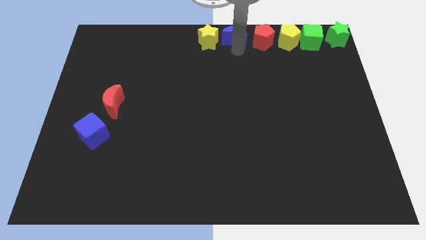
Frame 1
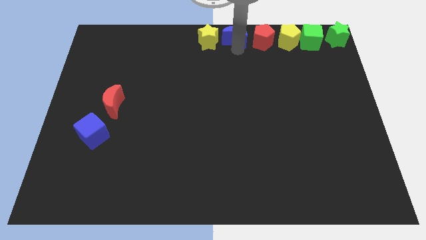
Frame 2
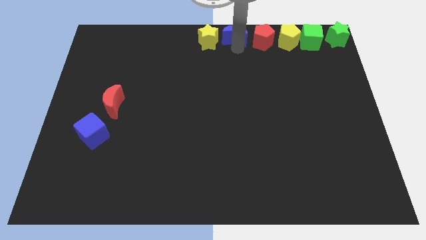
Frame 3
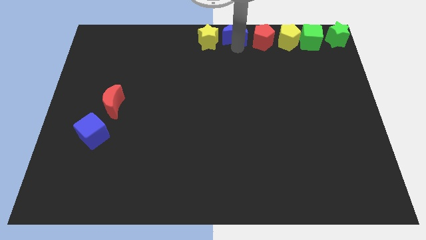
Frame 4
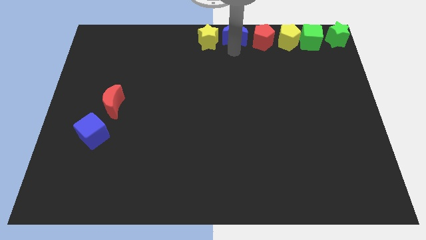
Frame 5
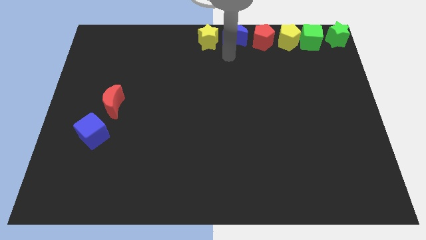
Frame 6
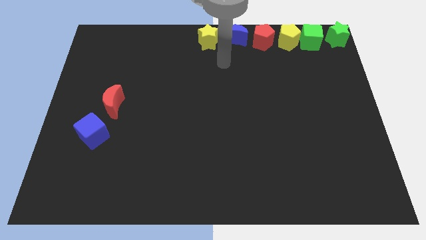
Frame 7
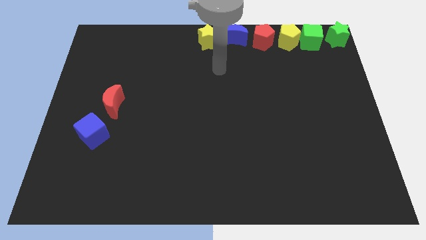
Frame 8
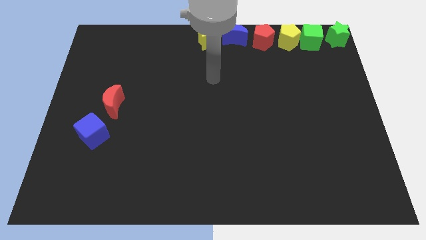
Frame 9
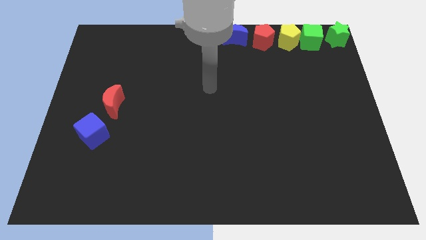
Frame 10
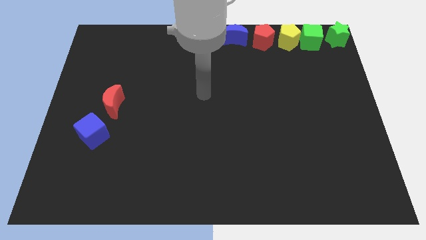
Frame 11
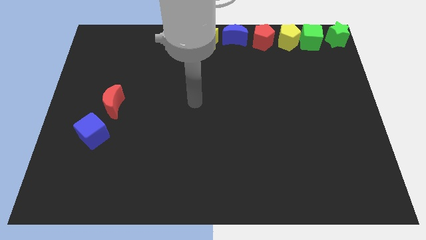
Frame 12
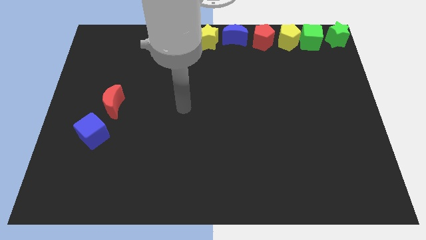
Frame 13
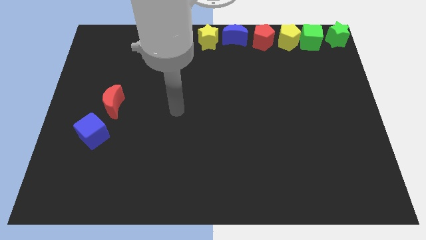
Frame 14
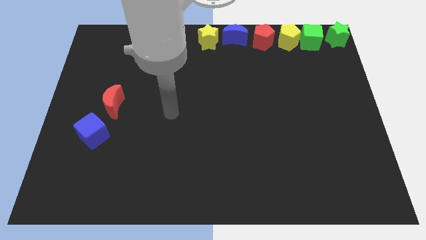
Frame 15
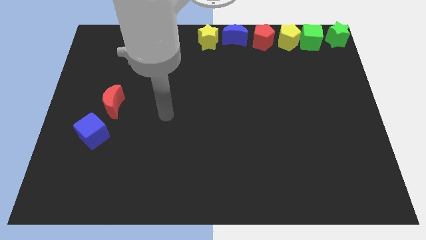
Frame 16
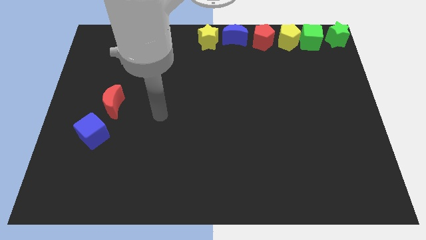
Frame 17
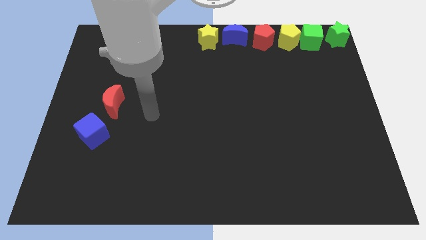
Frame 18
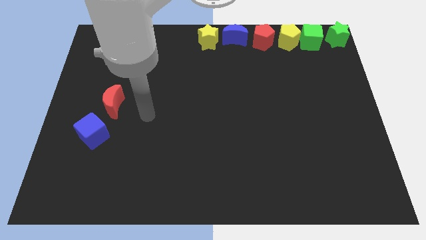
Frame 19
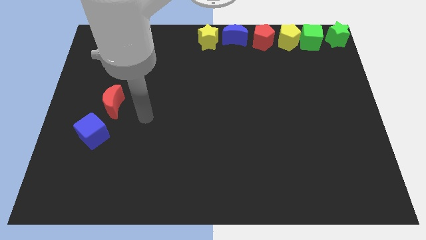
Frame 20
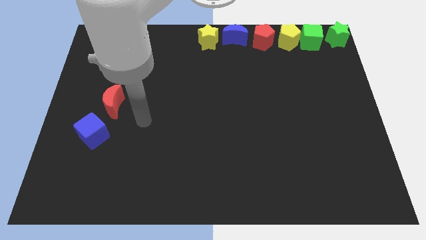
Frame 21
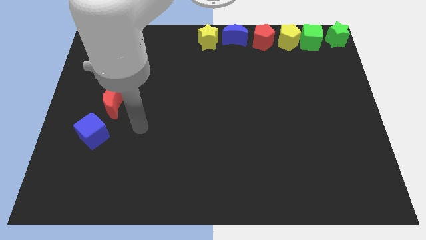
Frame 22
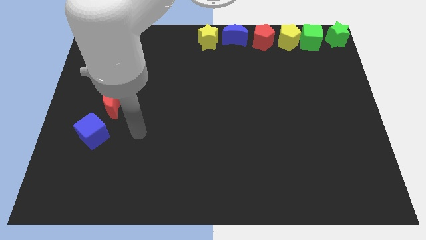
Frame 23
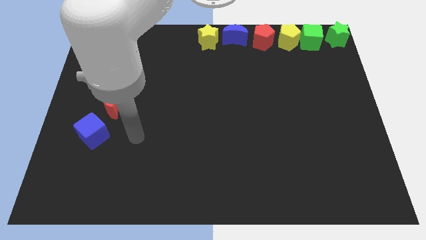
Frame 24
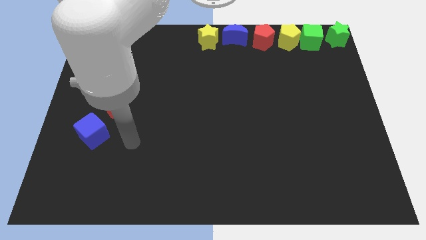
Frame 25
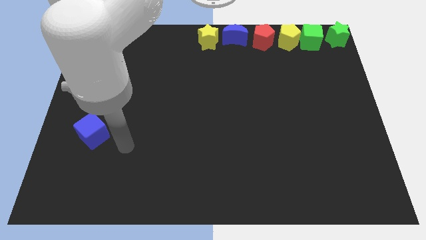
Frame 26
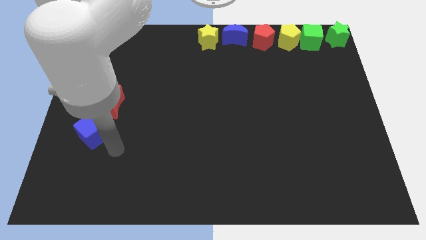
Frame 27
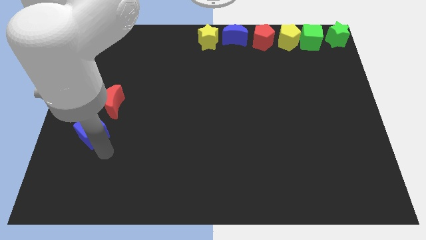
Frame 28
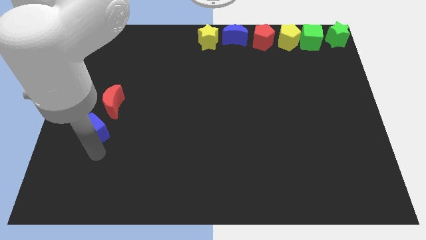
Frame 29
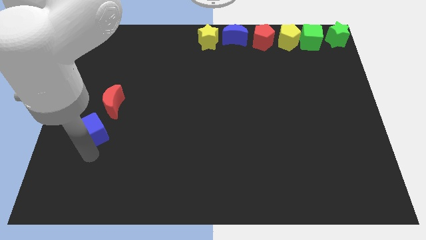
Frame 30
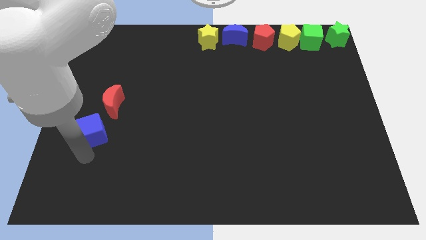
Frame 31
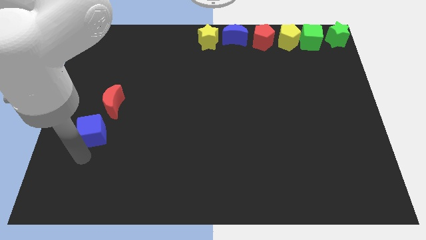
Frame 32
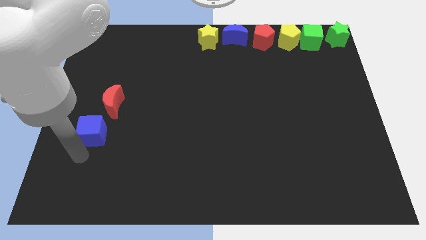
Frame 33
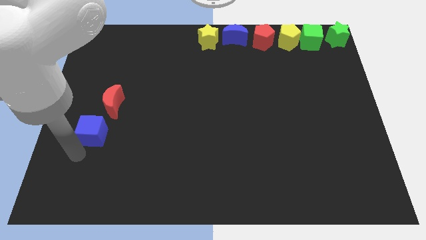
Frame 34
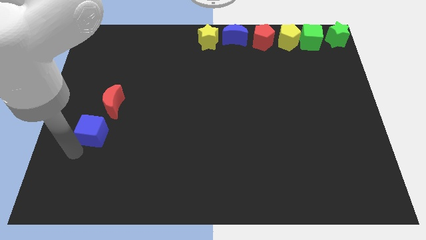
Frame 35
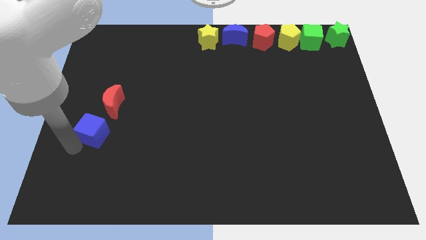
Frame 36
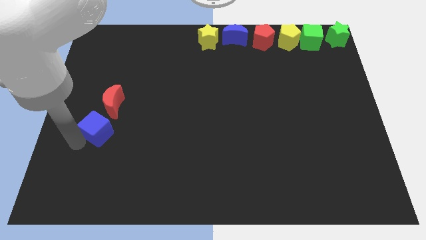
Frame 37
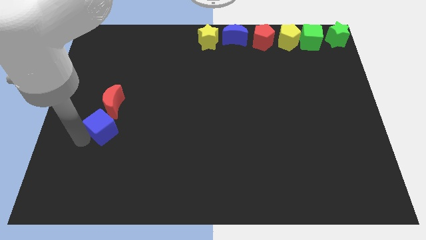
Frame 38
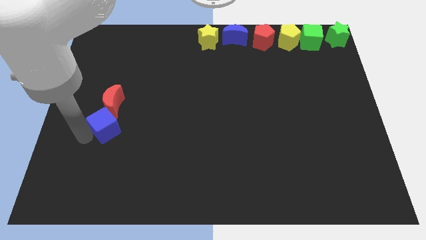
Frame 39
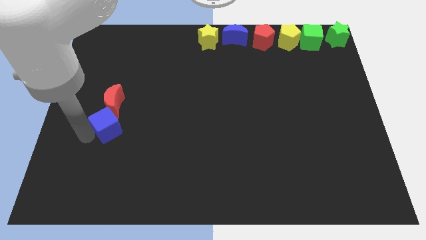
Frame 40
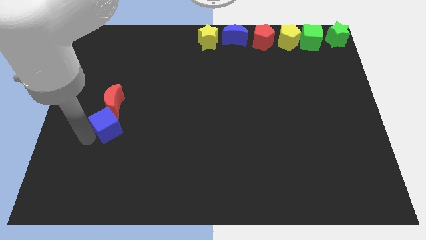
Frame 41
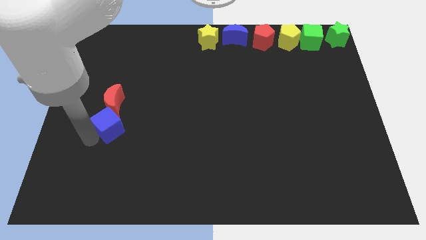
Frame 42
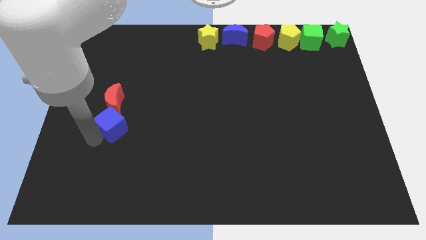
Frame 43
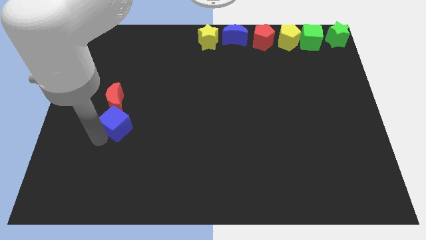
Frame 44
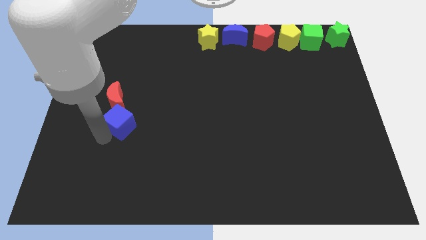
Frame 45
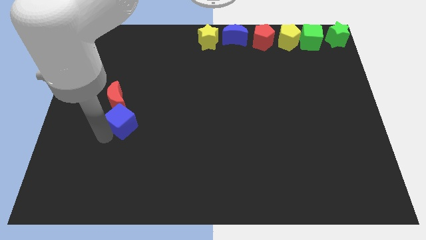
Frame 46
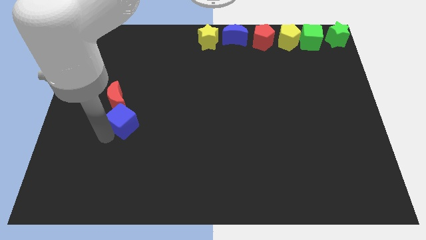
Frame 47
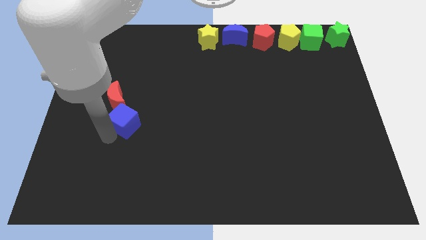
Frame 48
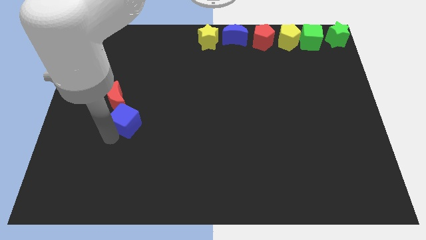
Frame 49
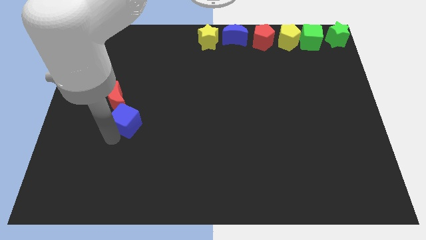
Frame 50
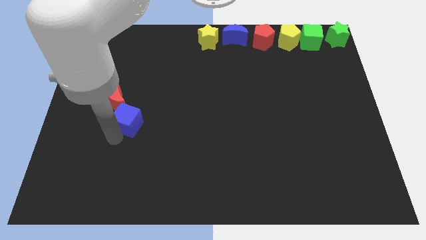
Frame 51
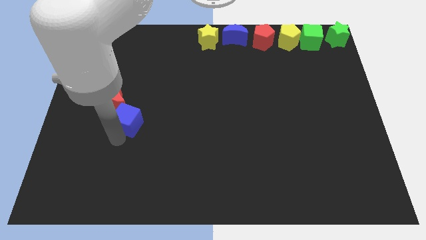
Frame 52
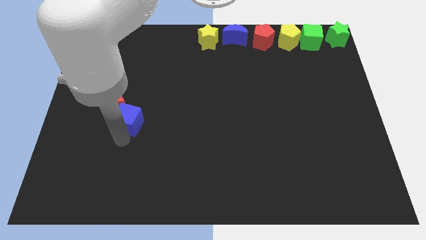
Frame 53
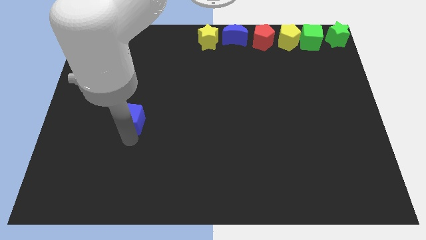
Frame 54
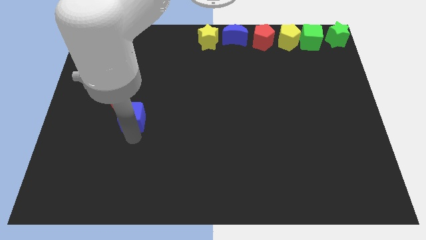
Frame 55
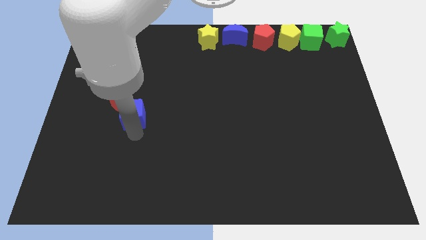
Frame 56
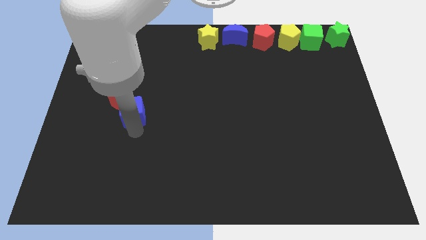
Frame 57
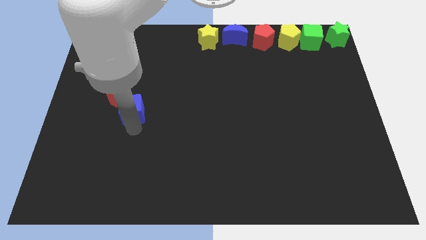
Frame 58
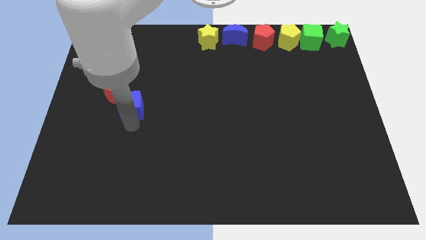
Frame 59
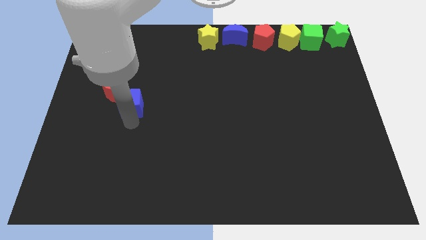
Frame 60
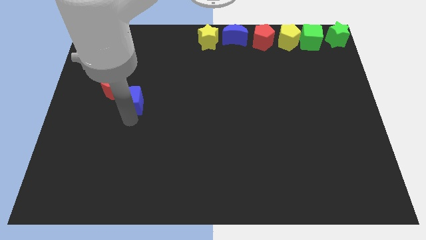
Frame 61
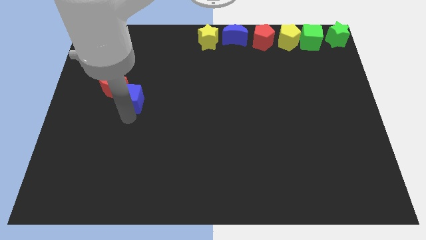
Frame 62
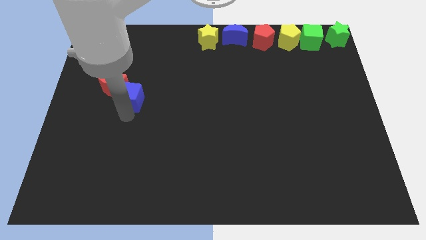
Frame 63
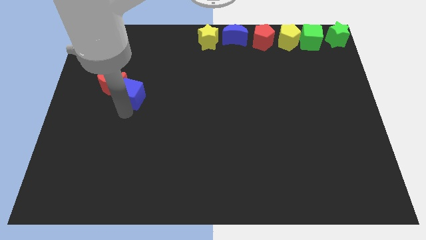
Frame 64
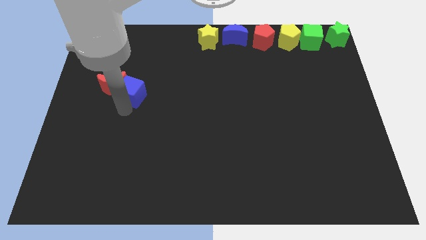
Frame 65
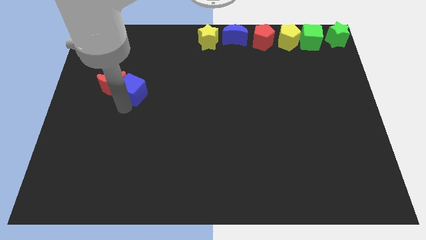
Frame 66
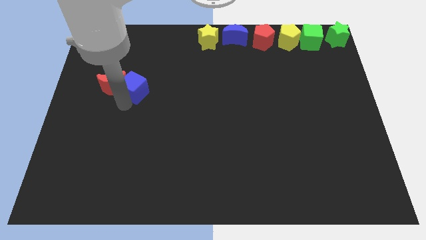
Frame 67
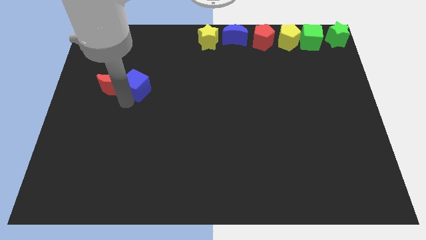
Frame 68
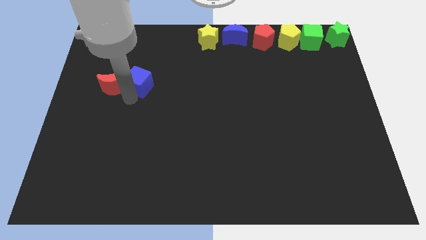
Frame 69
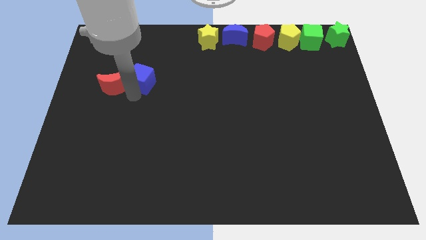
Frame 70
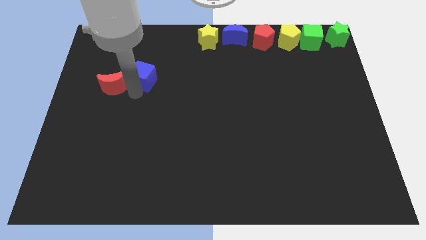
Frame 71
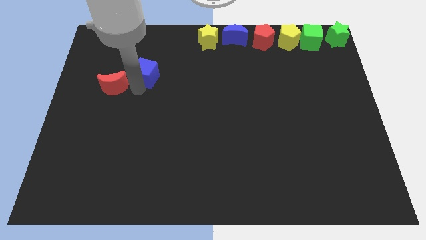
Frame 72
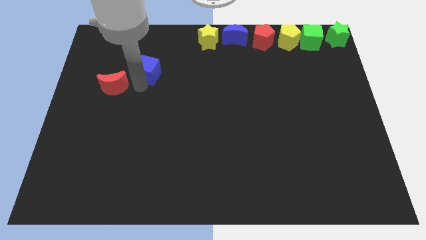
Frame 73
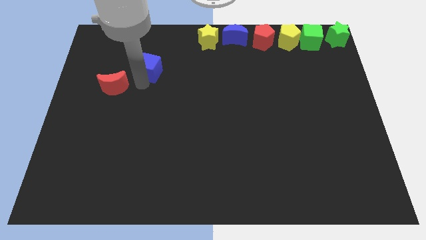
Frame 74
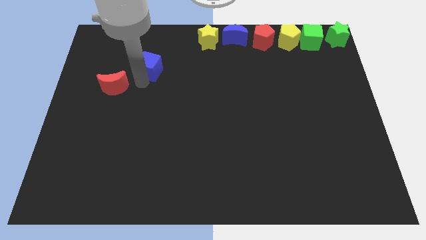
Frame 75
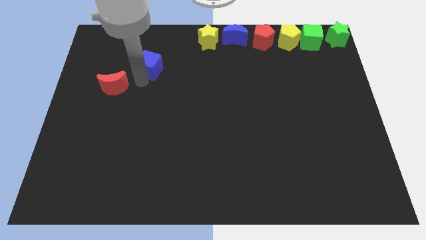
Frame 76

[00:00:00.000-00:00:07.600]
slide the blue cube diagonally top right to the red crescent

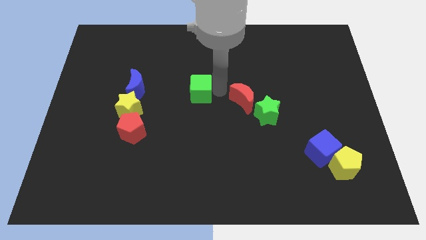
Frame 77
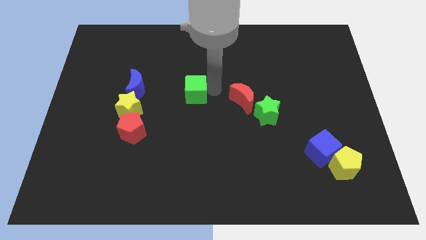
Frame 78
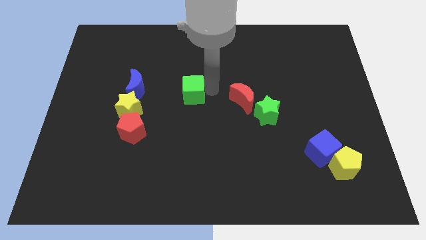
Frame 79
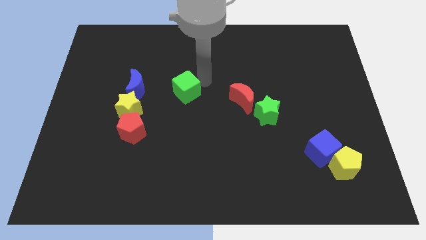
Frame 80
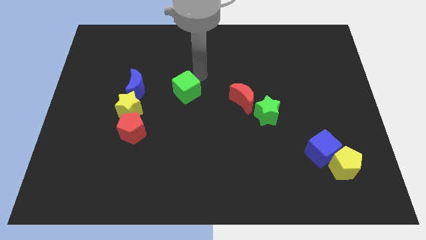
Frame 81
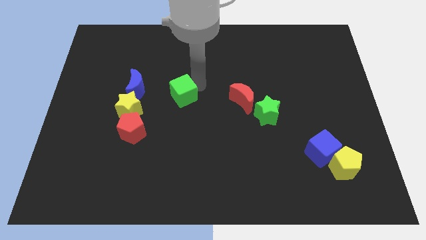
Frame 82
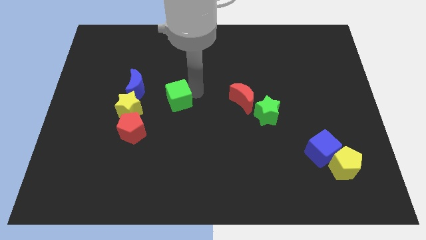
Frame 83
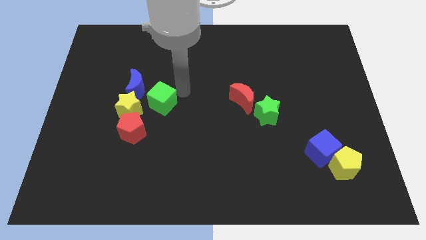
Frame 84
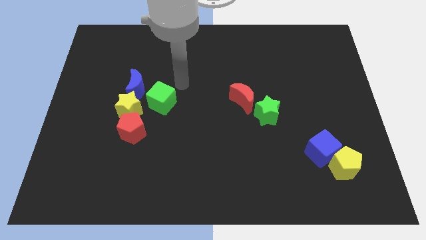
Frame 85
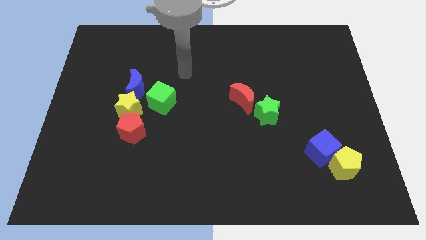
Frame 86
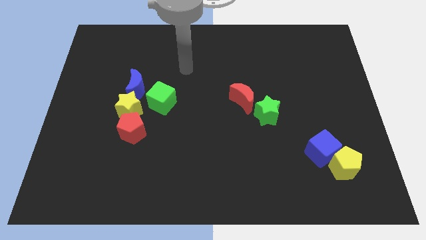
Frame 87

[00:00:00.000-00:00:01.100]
push the green cube to the right of the yellow star

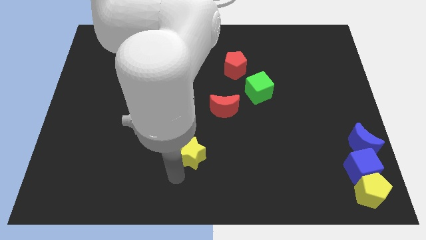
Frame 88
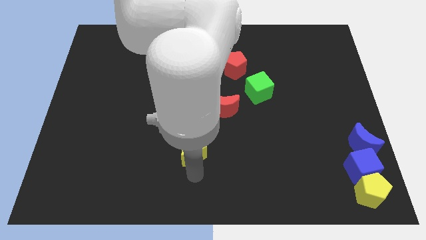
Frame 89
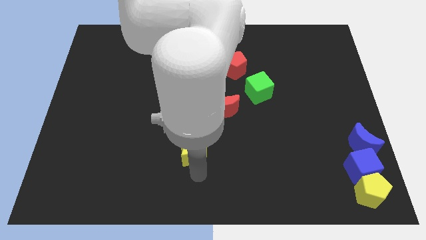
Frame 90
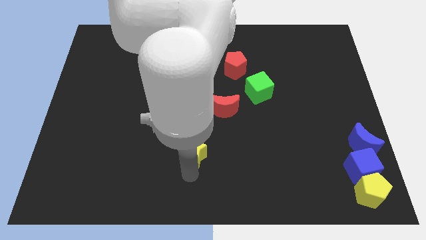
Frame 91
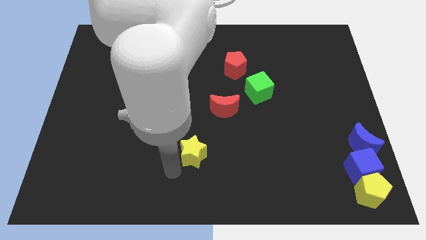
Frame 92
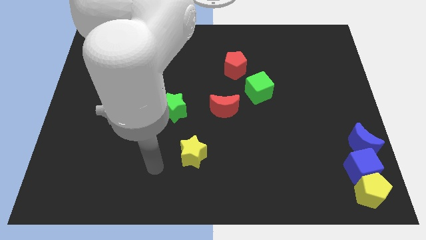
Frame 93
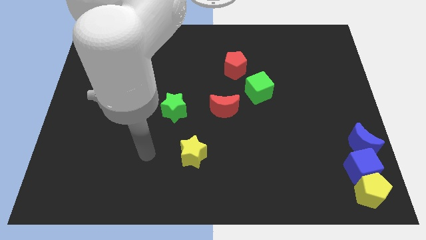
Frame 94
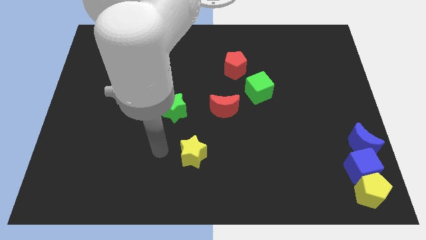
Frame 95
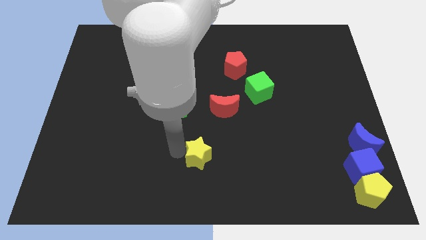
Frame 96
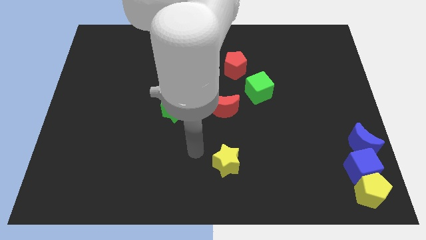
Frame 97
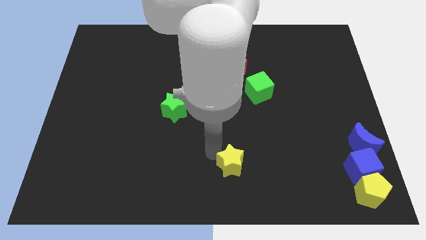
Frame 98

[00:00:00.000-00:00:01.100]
move the yellow star below the red moon
